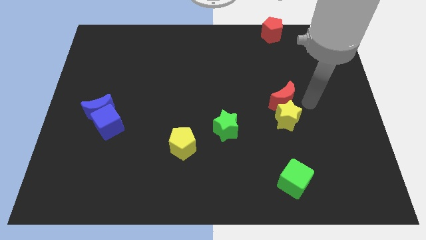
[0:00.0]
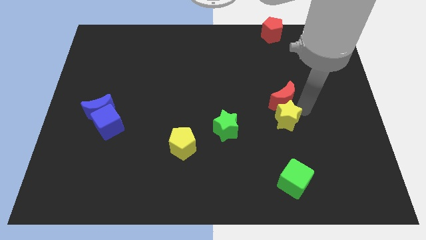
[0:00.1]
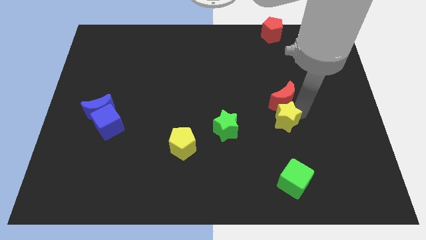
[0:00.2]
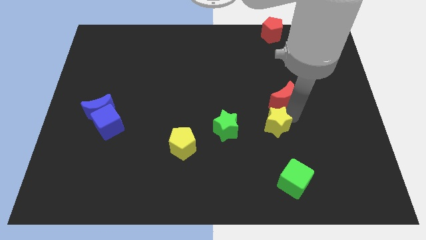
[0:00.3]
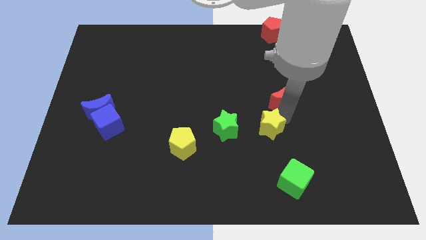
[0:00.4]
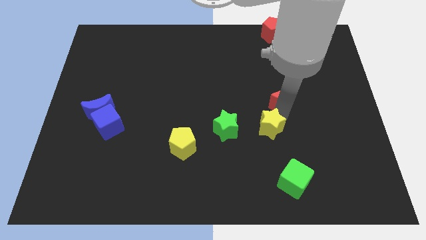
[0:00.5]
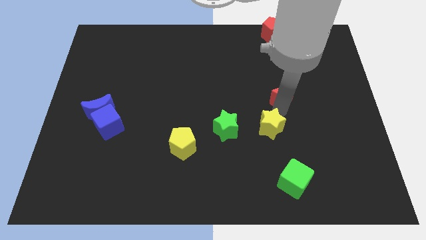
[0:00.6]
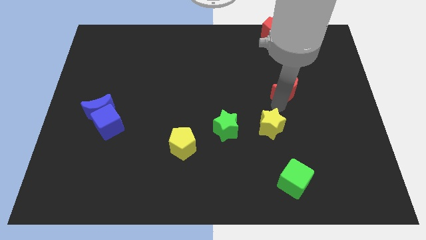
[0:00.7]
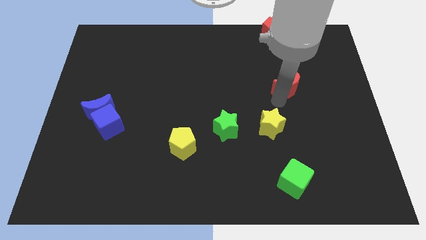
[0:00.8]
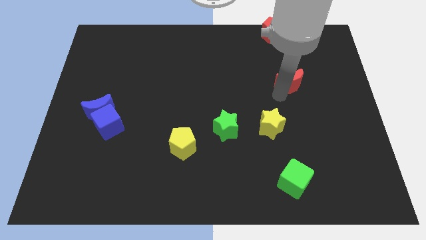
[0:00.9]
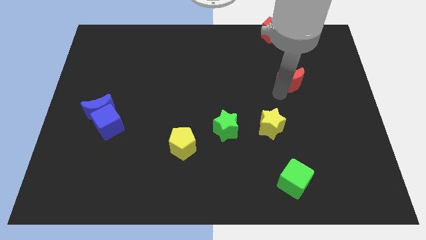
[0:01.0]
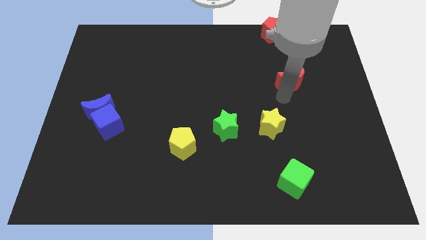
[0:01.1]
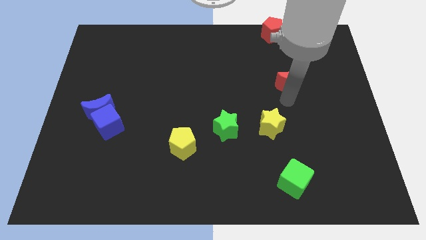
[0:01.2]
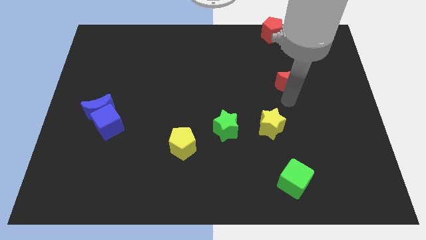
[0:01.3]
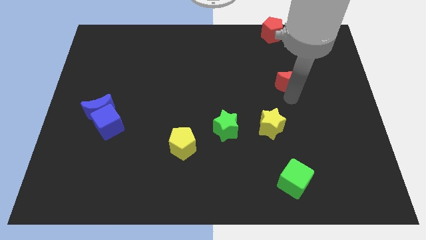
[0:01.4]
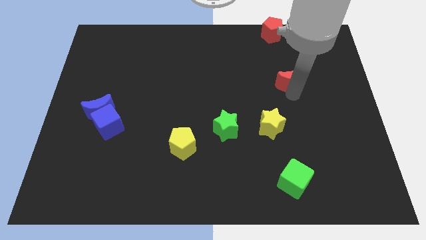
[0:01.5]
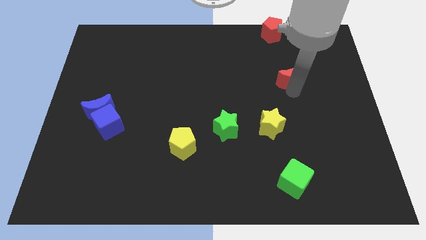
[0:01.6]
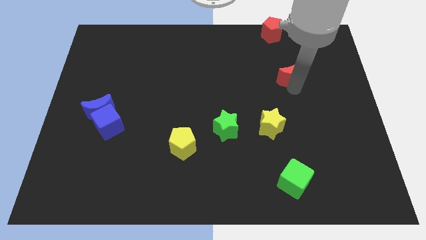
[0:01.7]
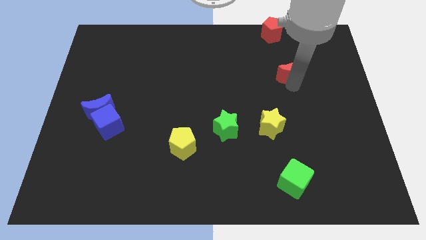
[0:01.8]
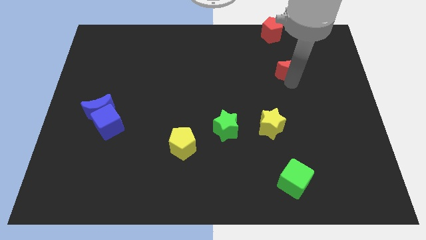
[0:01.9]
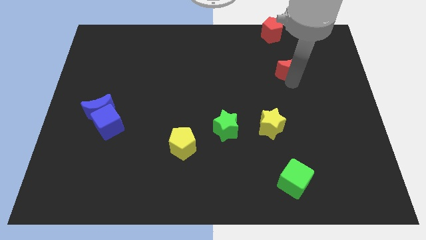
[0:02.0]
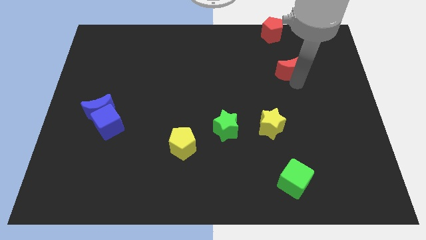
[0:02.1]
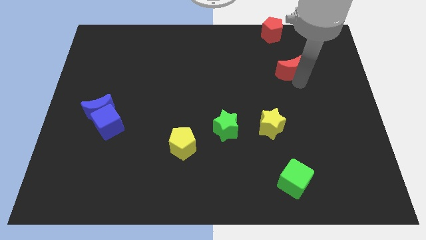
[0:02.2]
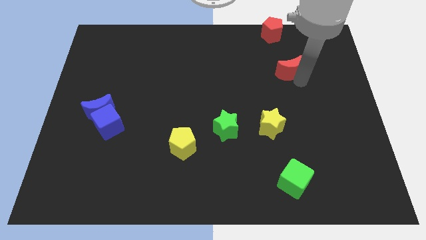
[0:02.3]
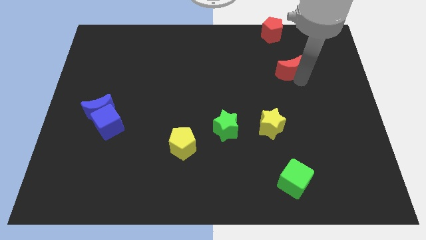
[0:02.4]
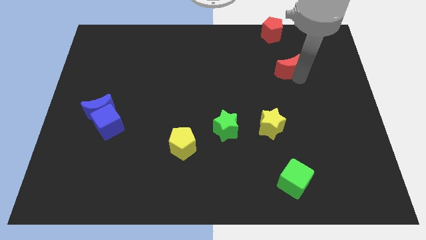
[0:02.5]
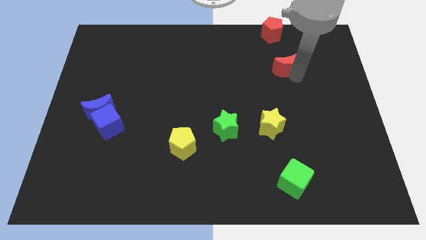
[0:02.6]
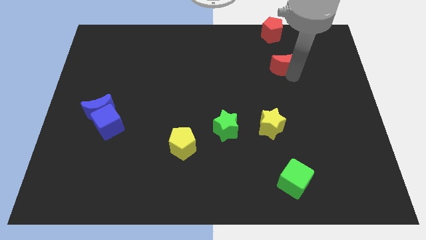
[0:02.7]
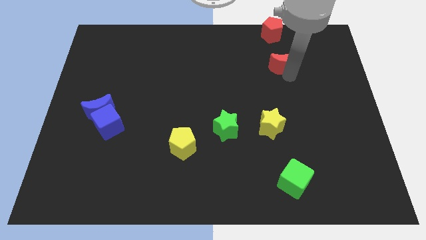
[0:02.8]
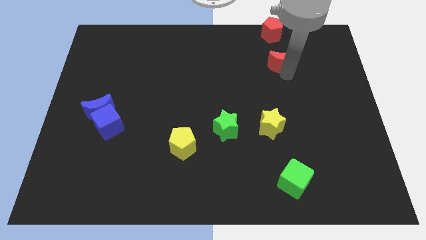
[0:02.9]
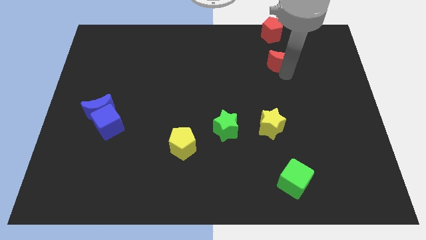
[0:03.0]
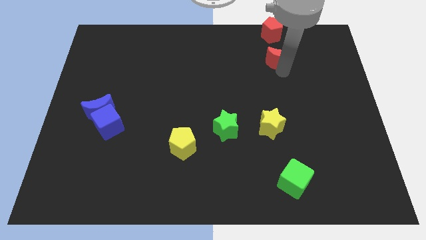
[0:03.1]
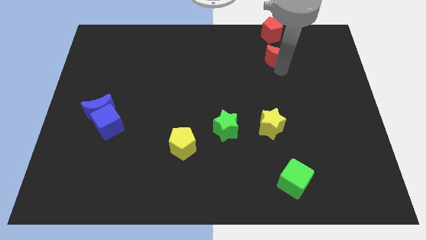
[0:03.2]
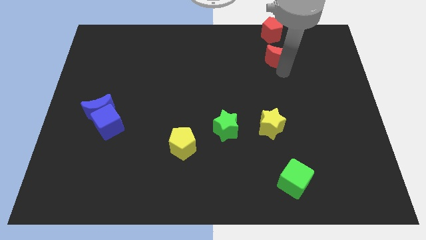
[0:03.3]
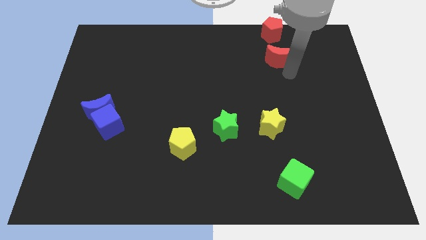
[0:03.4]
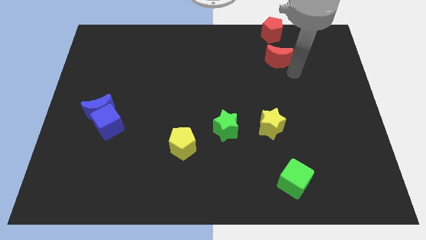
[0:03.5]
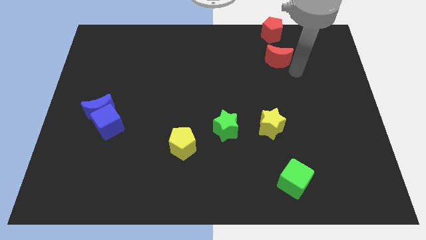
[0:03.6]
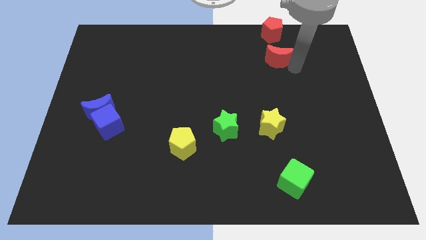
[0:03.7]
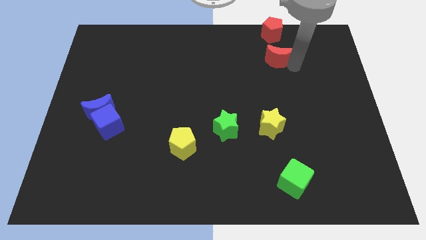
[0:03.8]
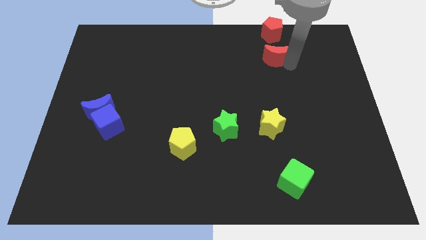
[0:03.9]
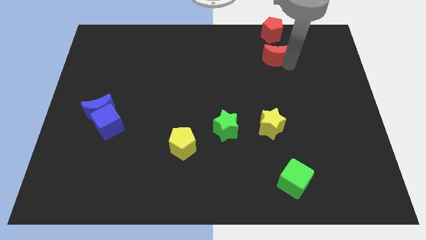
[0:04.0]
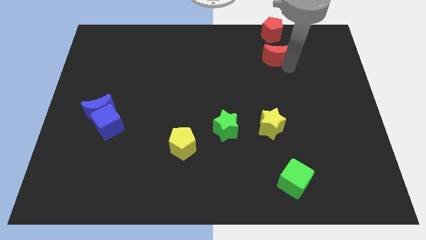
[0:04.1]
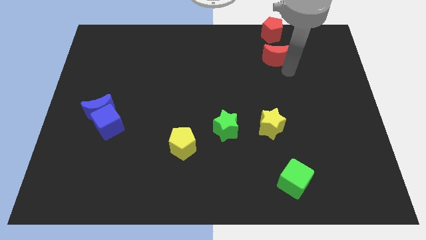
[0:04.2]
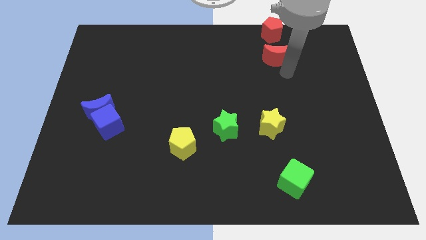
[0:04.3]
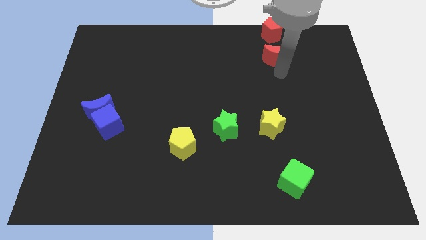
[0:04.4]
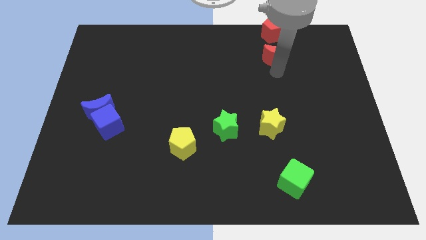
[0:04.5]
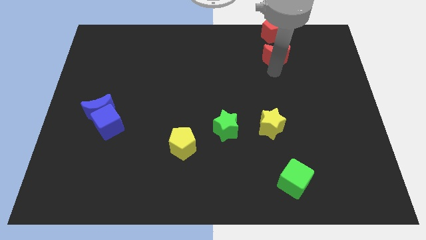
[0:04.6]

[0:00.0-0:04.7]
place red moon below the red pentagon

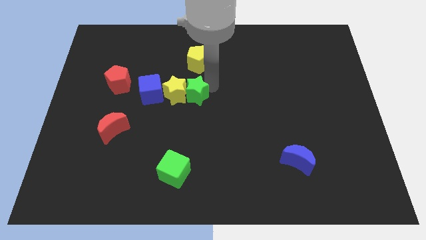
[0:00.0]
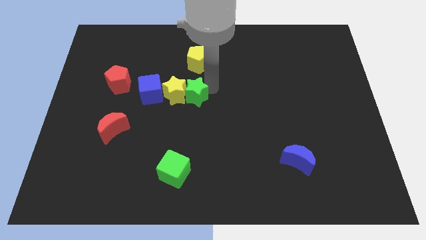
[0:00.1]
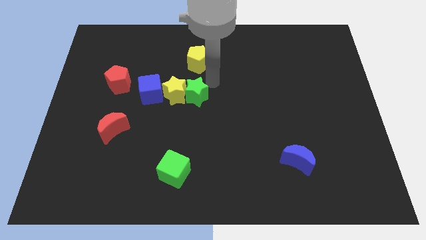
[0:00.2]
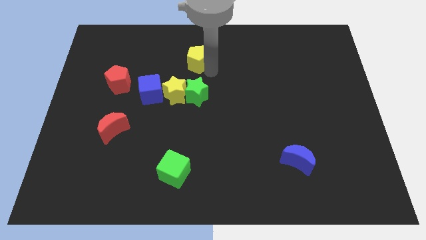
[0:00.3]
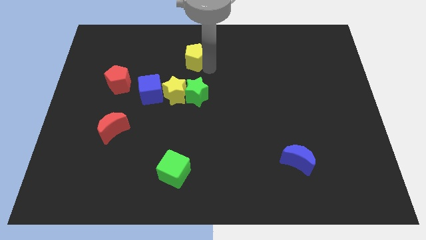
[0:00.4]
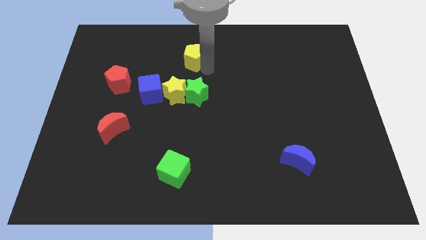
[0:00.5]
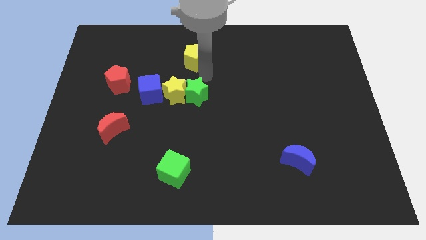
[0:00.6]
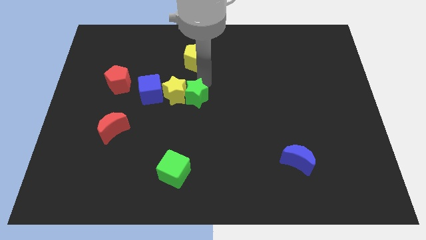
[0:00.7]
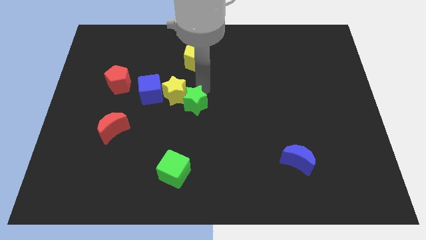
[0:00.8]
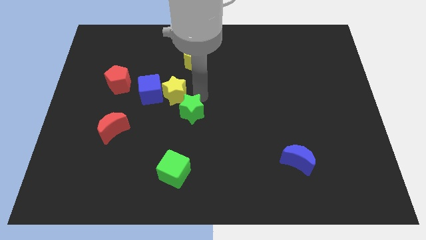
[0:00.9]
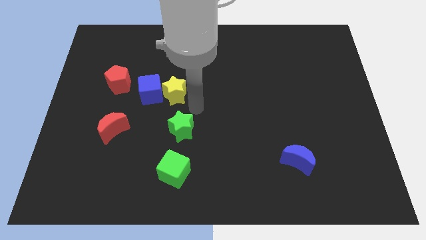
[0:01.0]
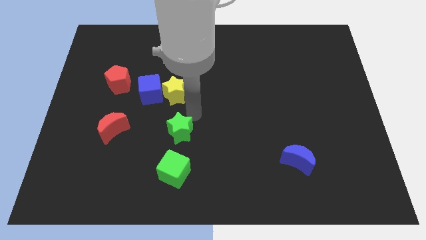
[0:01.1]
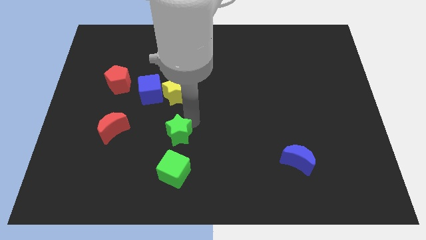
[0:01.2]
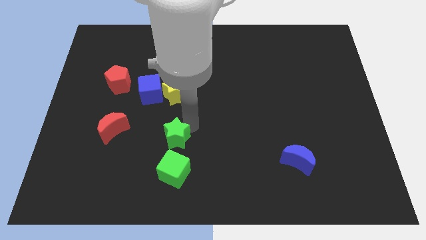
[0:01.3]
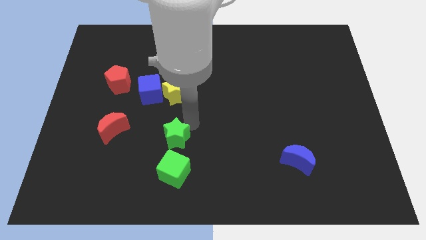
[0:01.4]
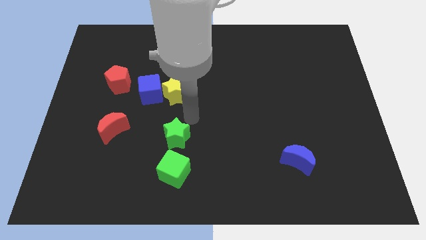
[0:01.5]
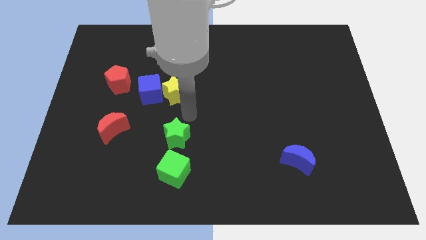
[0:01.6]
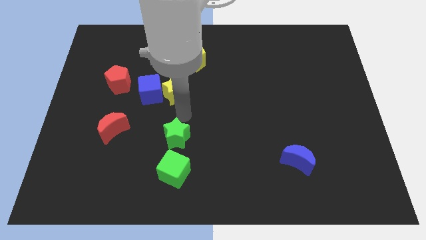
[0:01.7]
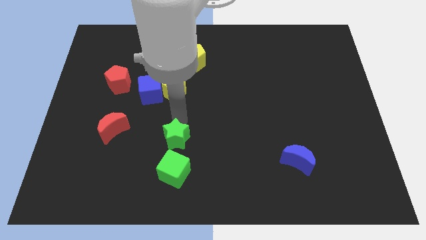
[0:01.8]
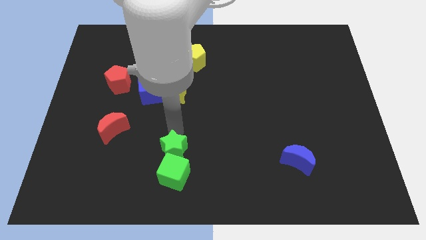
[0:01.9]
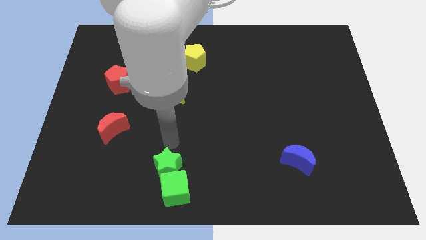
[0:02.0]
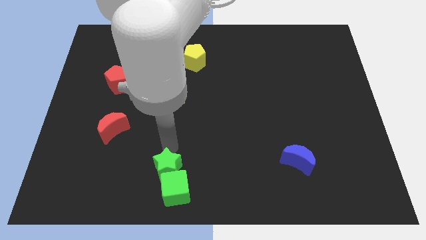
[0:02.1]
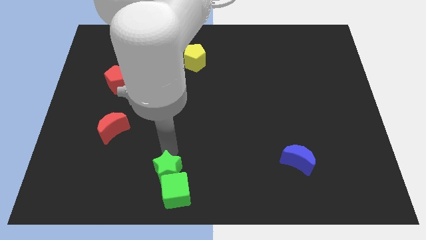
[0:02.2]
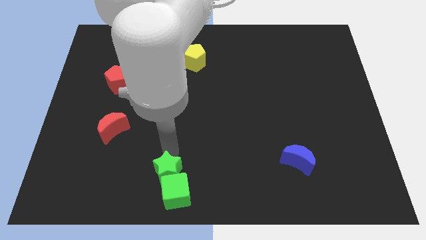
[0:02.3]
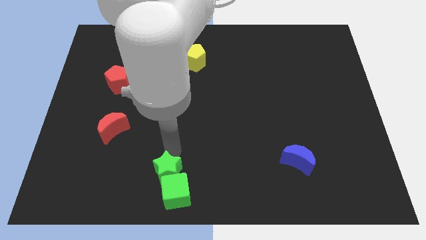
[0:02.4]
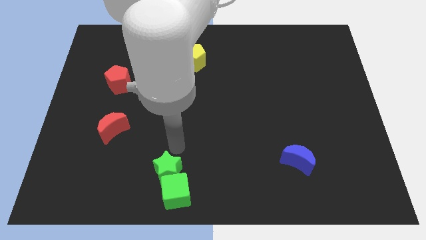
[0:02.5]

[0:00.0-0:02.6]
move the green star above the green cube

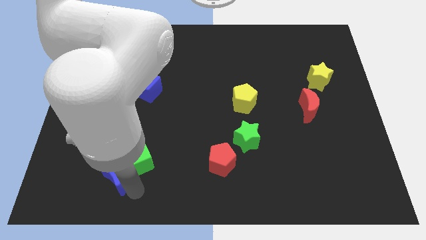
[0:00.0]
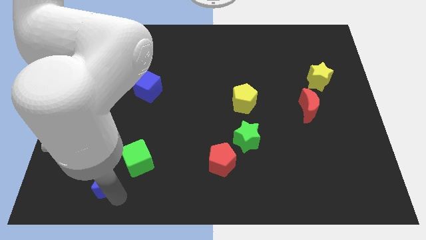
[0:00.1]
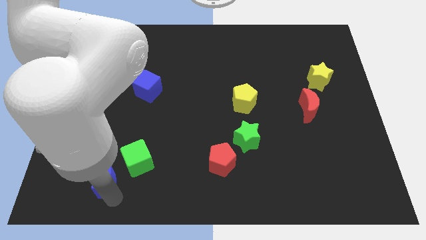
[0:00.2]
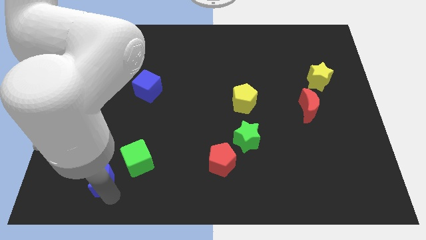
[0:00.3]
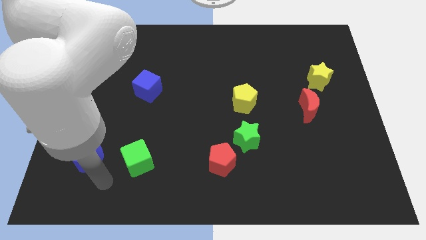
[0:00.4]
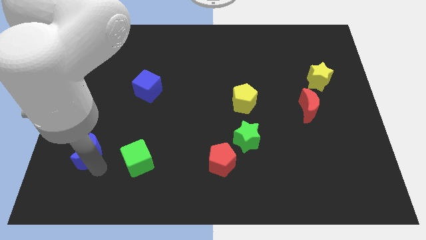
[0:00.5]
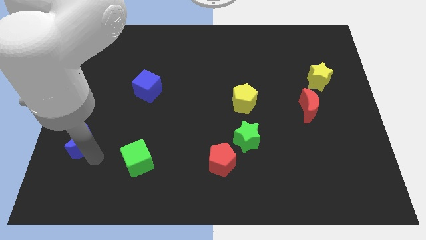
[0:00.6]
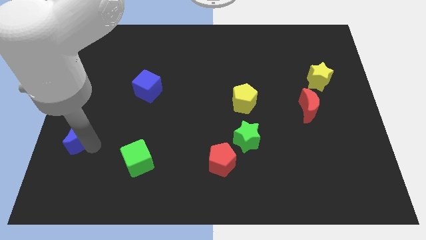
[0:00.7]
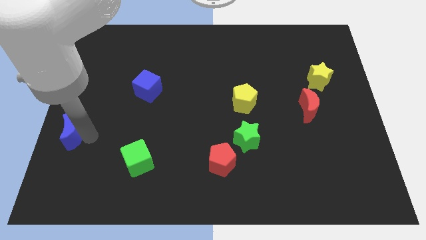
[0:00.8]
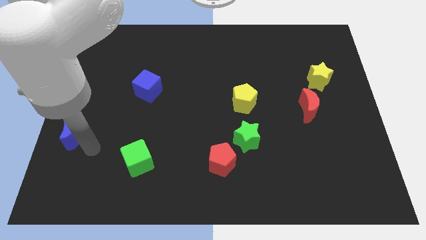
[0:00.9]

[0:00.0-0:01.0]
move the blue crescent to the top left of the green cube

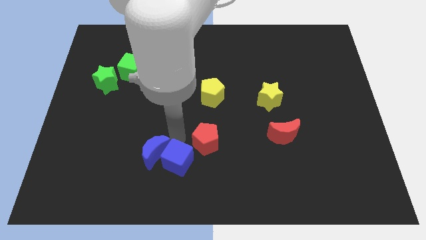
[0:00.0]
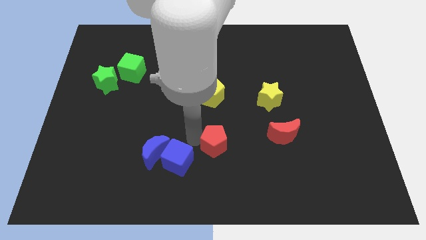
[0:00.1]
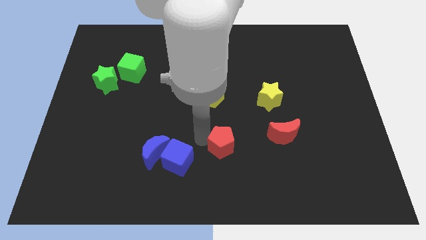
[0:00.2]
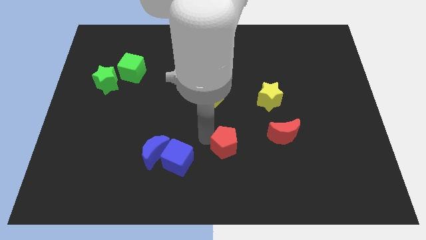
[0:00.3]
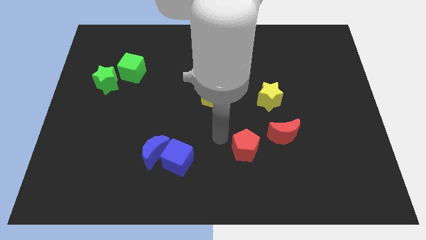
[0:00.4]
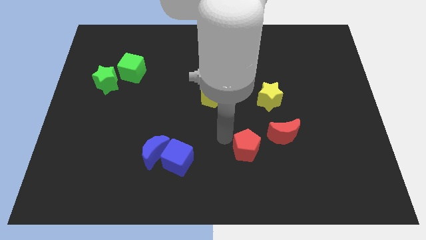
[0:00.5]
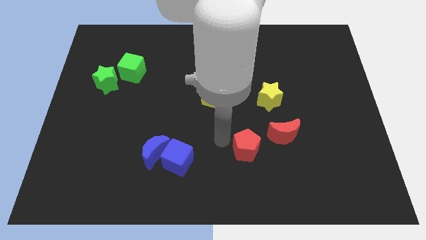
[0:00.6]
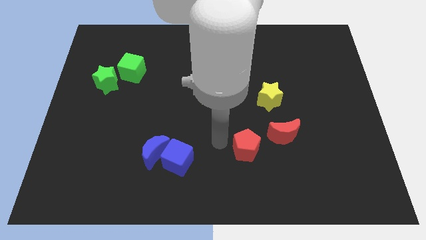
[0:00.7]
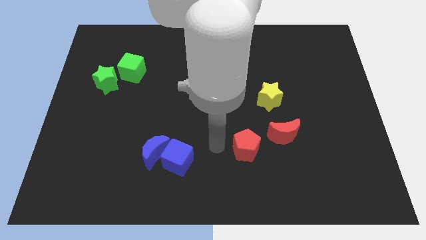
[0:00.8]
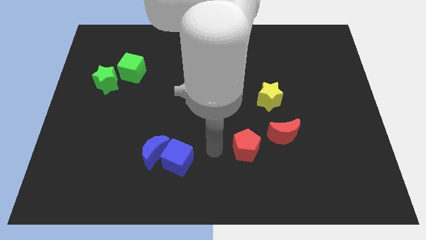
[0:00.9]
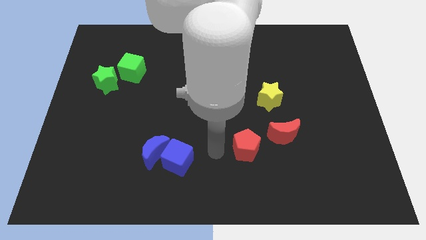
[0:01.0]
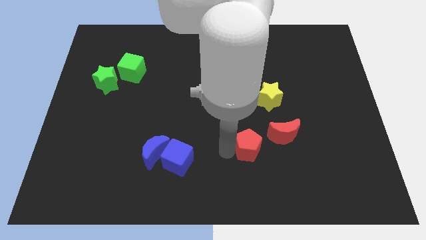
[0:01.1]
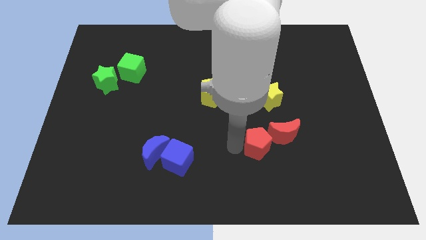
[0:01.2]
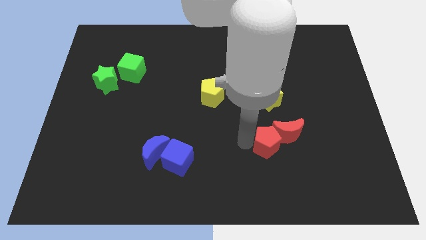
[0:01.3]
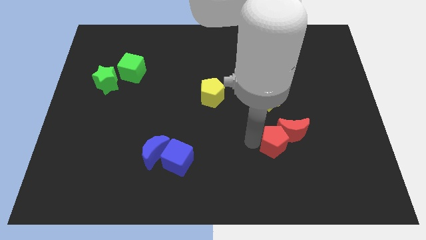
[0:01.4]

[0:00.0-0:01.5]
push the red pentagon close to the red crescent
